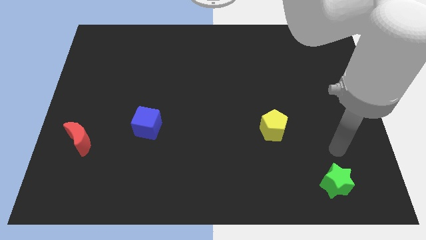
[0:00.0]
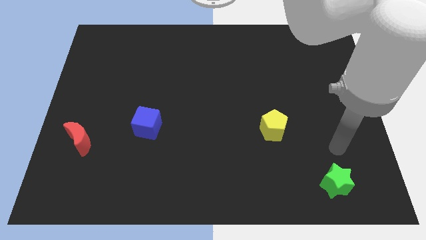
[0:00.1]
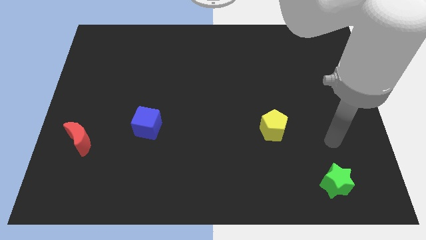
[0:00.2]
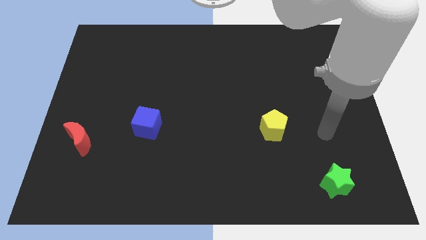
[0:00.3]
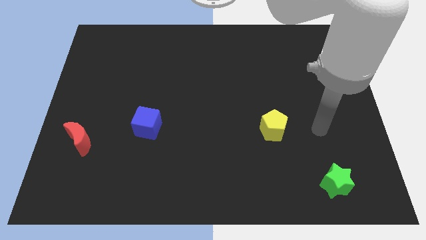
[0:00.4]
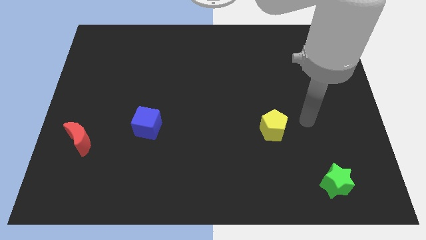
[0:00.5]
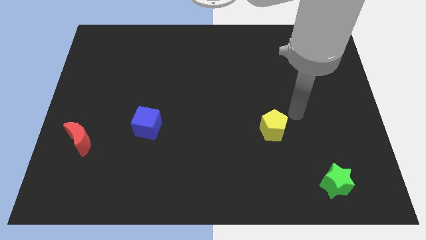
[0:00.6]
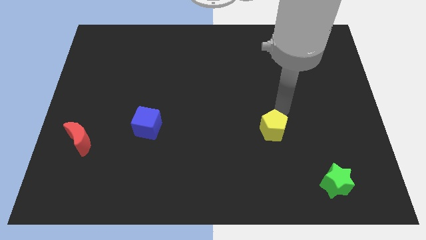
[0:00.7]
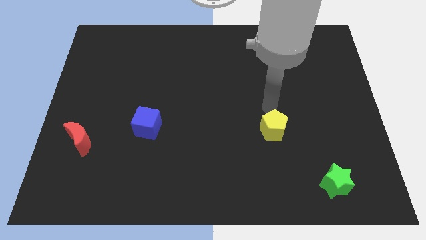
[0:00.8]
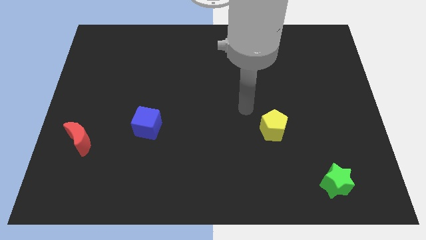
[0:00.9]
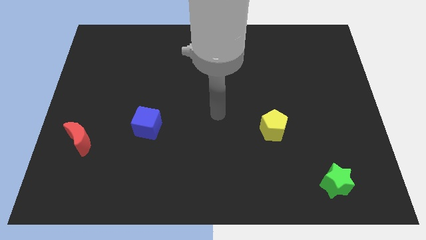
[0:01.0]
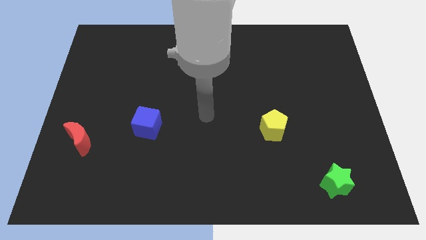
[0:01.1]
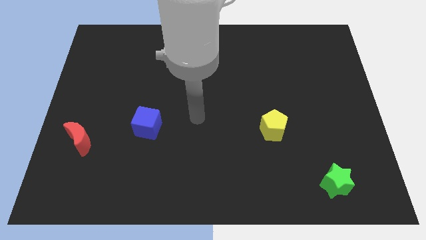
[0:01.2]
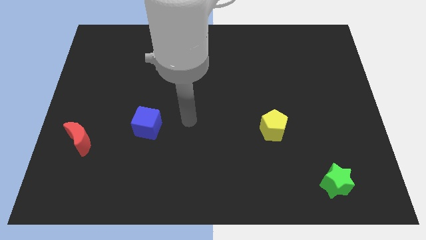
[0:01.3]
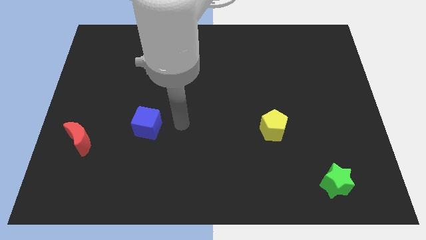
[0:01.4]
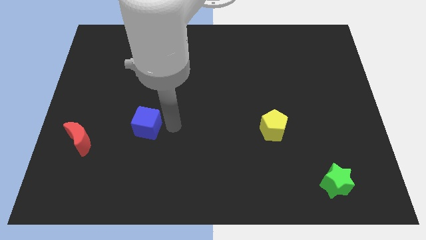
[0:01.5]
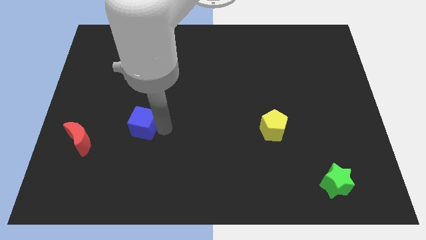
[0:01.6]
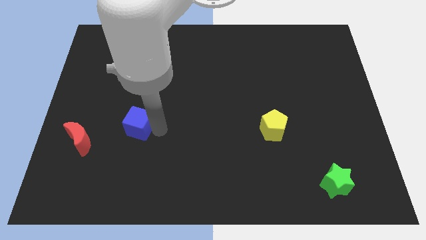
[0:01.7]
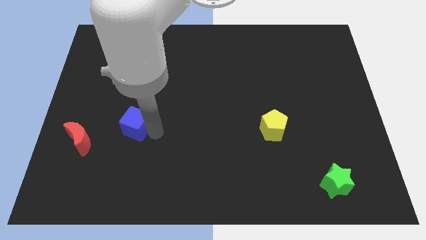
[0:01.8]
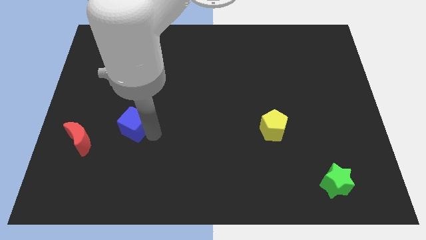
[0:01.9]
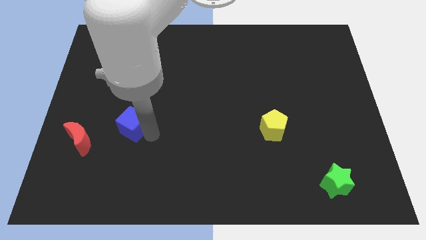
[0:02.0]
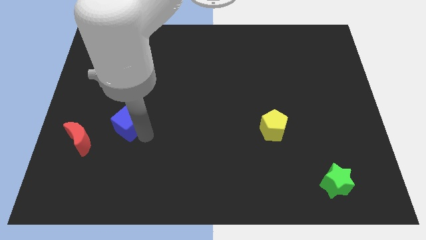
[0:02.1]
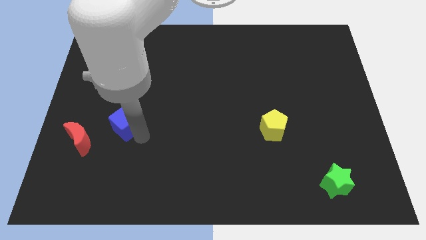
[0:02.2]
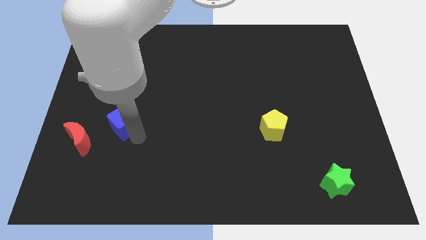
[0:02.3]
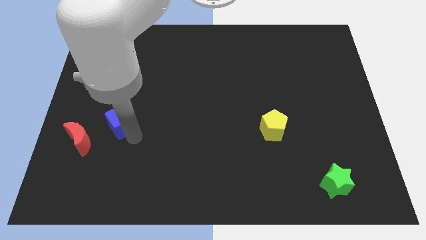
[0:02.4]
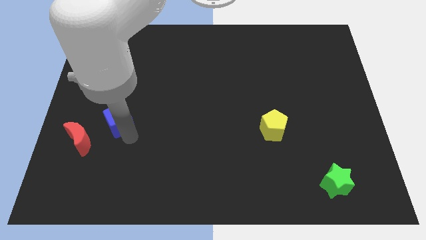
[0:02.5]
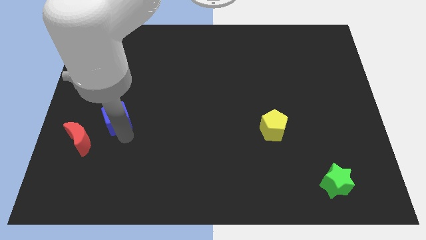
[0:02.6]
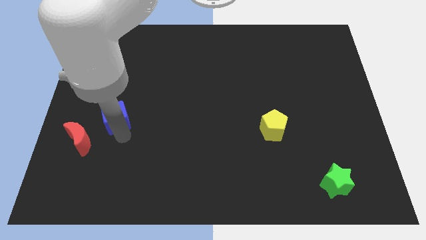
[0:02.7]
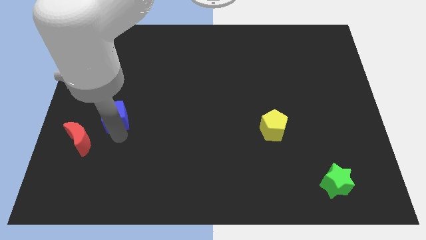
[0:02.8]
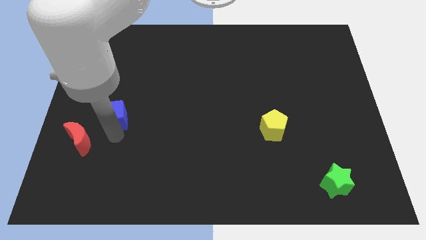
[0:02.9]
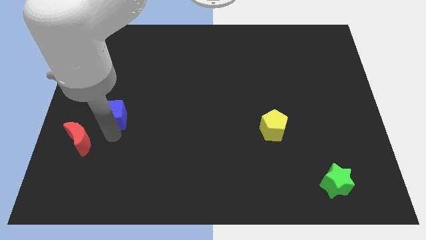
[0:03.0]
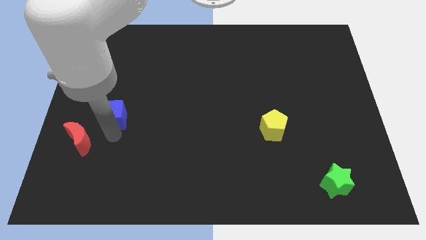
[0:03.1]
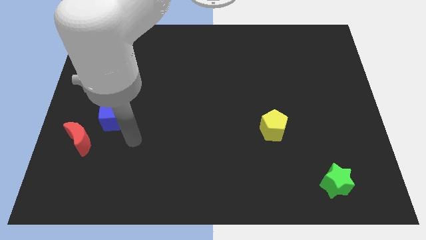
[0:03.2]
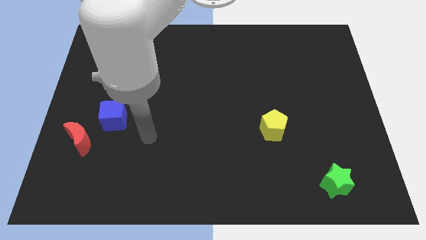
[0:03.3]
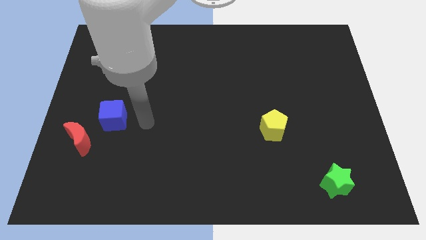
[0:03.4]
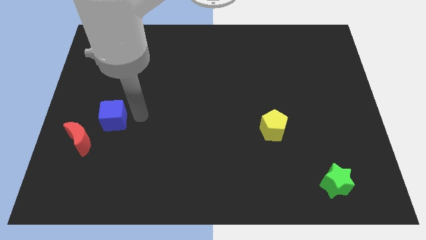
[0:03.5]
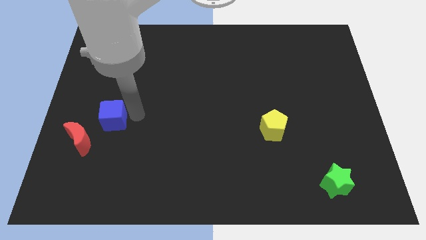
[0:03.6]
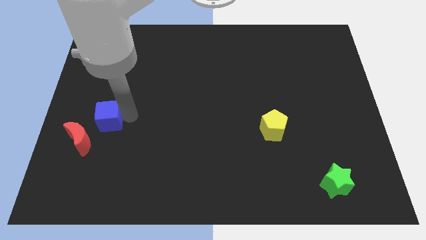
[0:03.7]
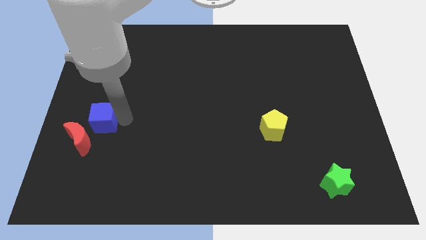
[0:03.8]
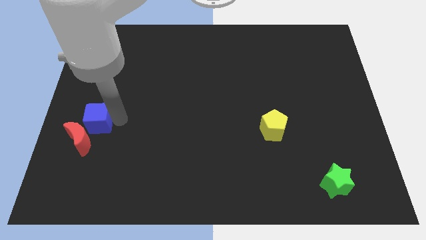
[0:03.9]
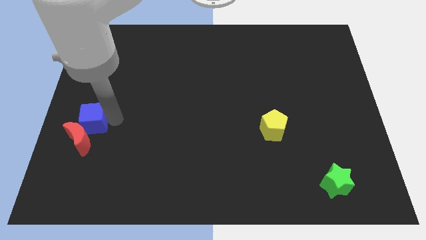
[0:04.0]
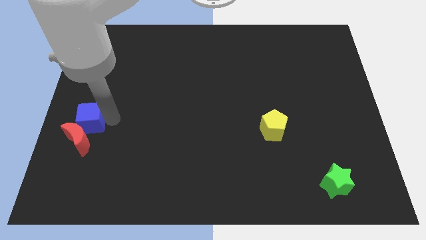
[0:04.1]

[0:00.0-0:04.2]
push the blue cube towards the red moon

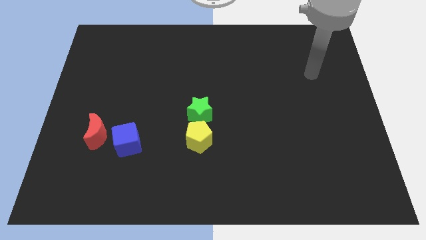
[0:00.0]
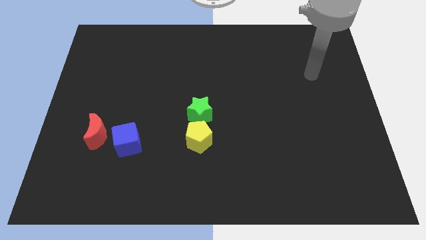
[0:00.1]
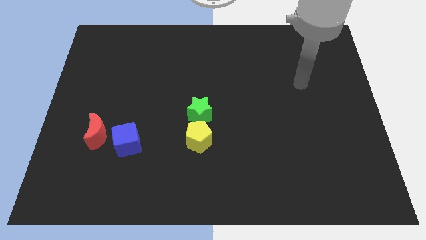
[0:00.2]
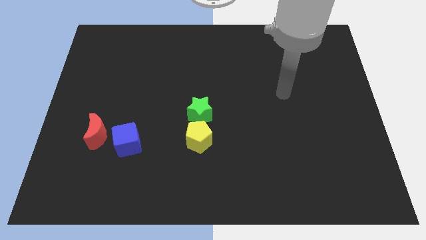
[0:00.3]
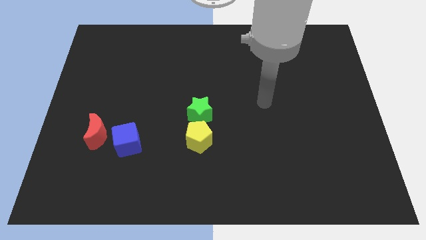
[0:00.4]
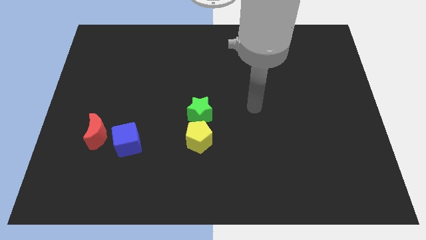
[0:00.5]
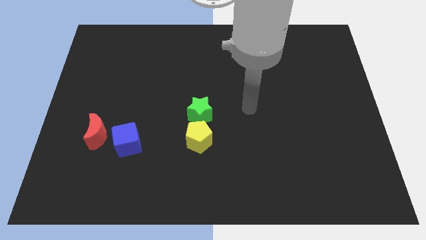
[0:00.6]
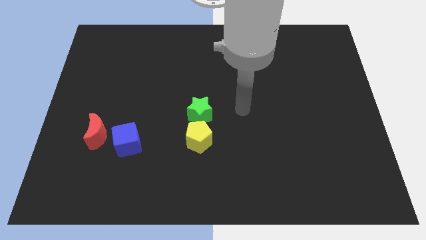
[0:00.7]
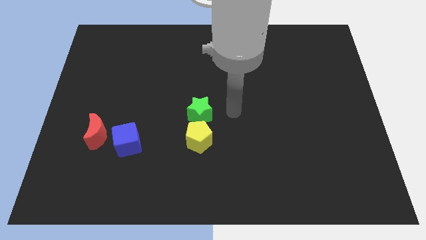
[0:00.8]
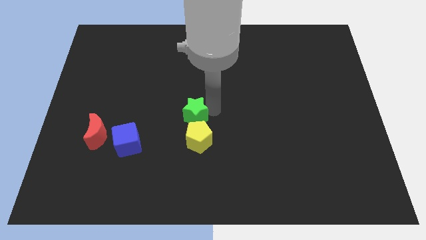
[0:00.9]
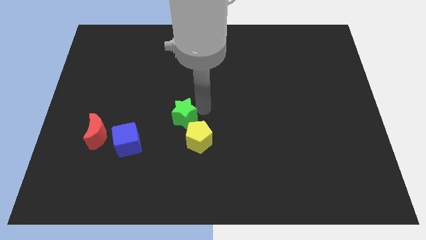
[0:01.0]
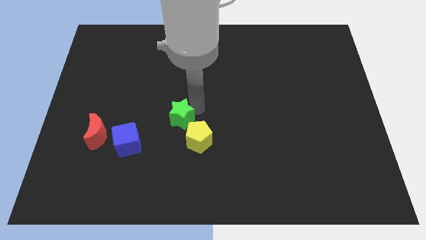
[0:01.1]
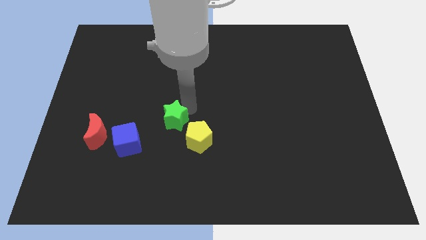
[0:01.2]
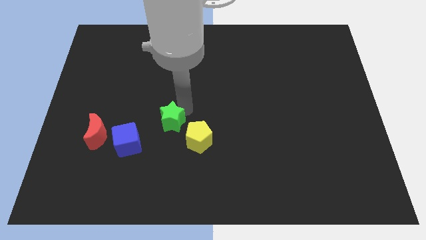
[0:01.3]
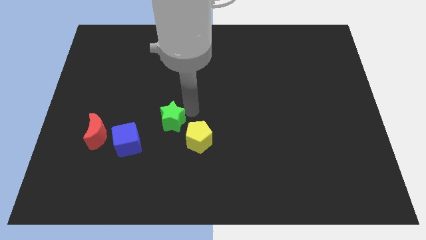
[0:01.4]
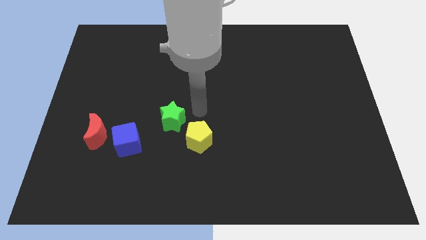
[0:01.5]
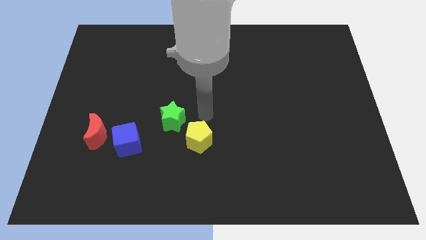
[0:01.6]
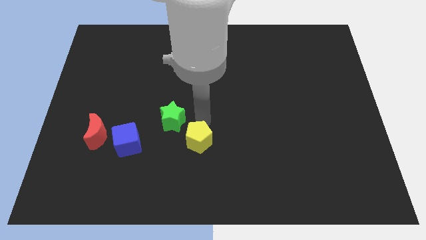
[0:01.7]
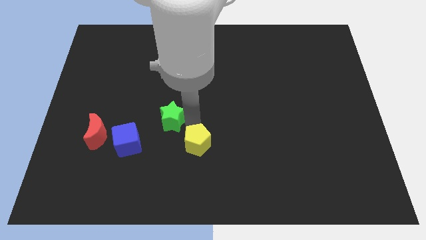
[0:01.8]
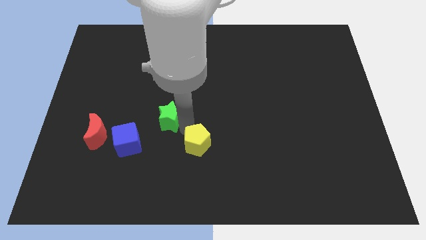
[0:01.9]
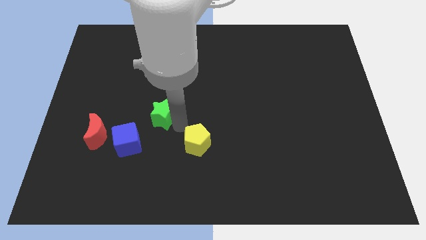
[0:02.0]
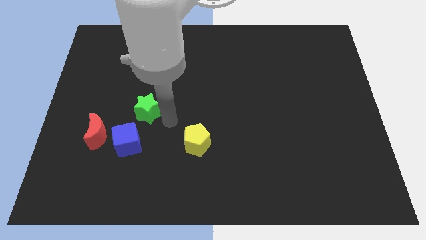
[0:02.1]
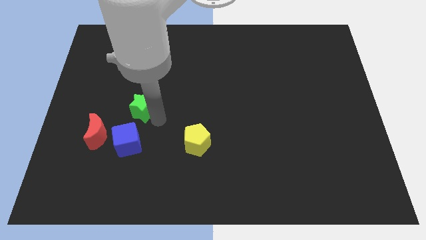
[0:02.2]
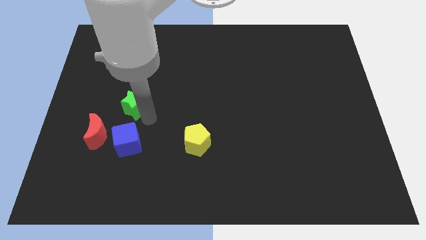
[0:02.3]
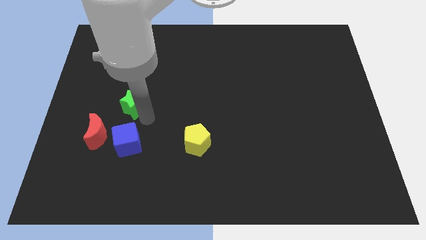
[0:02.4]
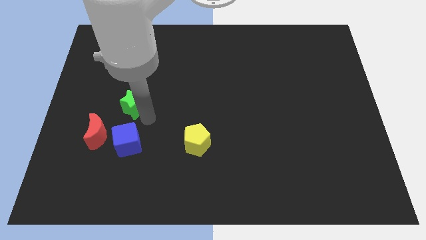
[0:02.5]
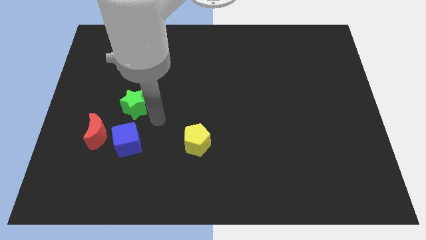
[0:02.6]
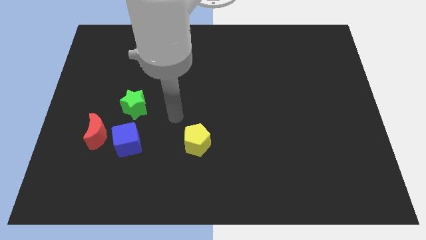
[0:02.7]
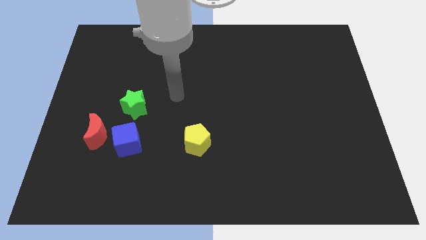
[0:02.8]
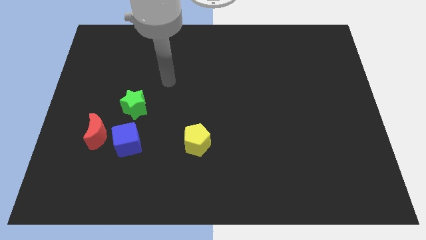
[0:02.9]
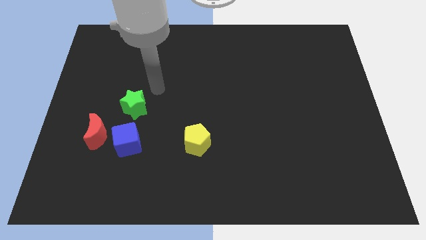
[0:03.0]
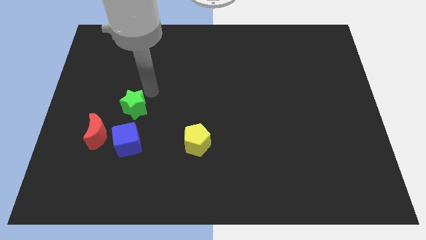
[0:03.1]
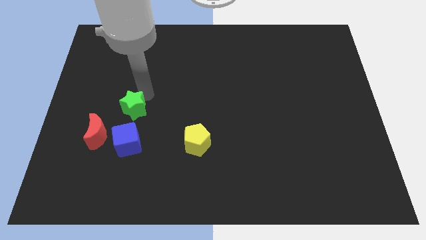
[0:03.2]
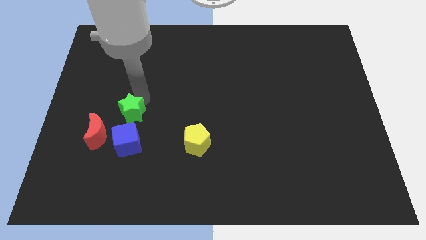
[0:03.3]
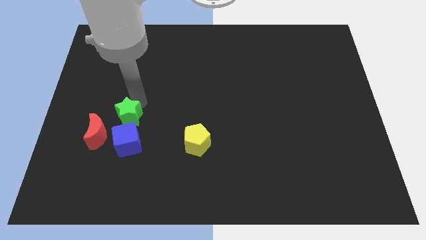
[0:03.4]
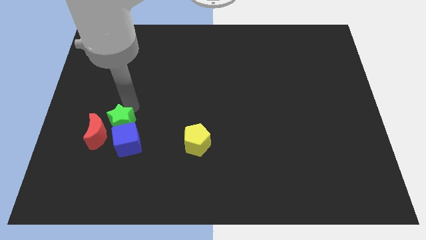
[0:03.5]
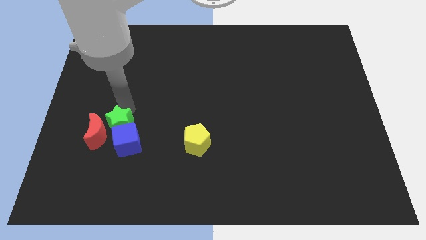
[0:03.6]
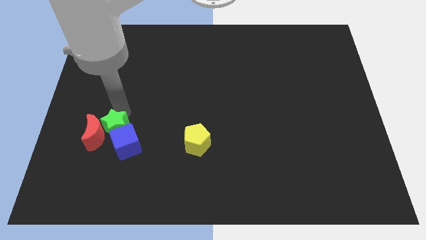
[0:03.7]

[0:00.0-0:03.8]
move the green star to the red block

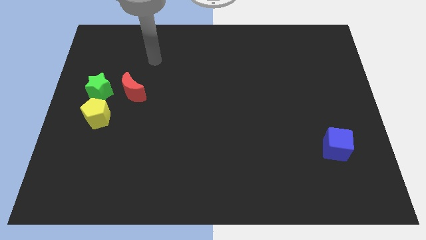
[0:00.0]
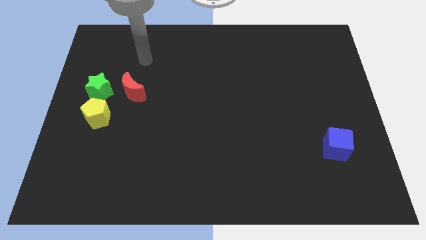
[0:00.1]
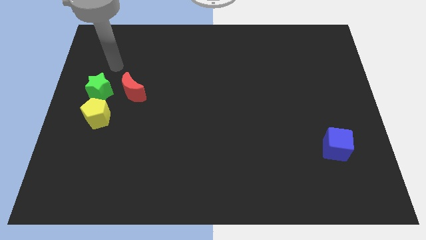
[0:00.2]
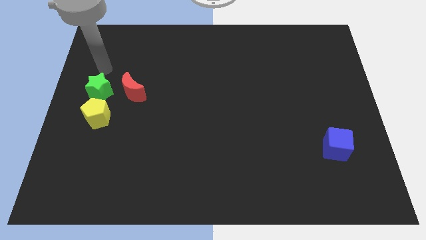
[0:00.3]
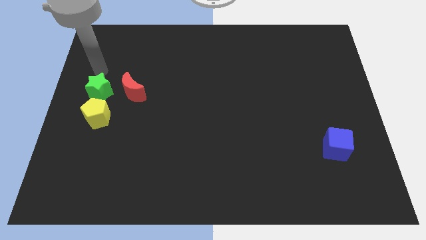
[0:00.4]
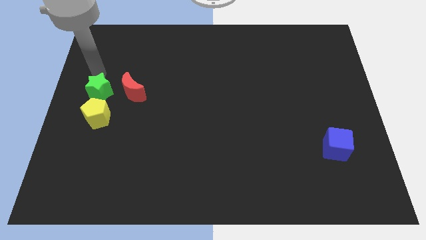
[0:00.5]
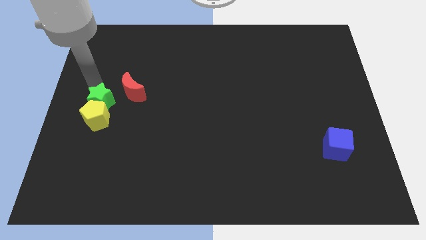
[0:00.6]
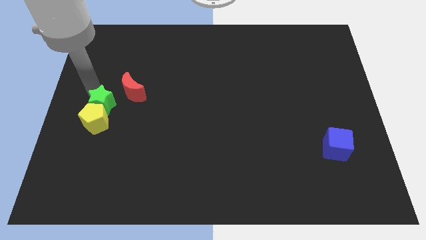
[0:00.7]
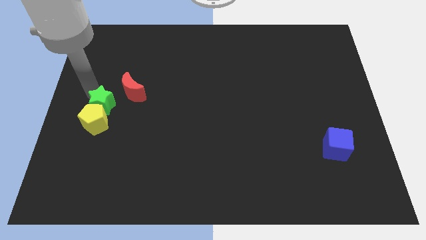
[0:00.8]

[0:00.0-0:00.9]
put the star close to the yellow block
